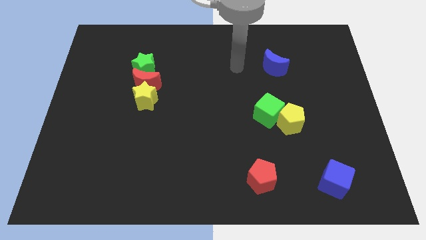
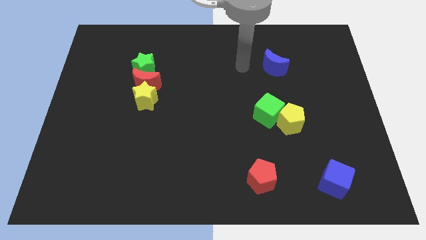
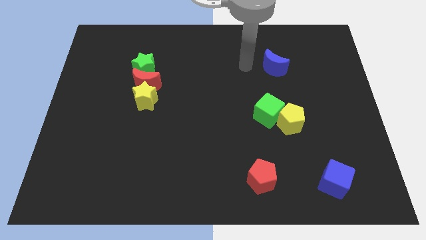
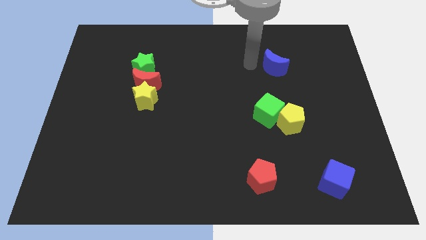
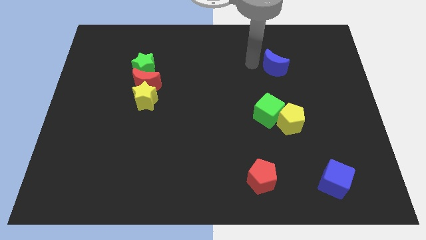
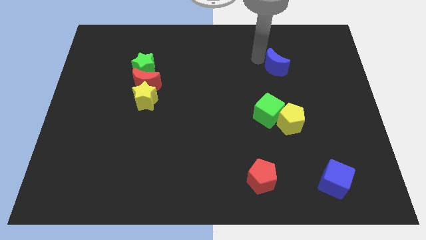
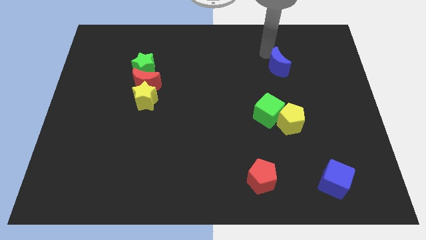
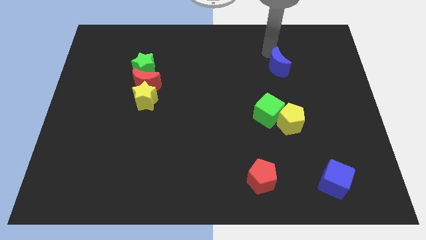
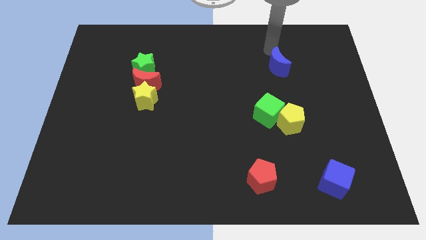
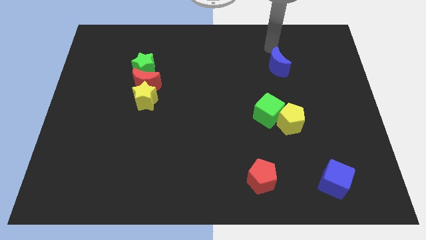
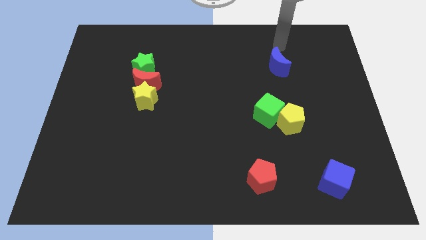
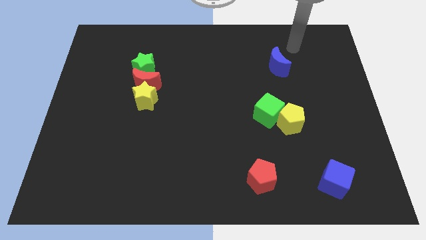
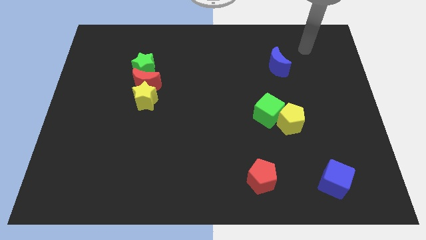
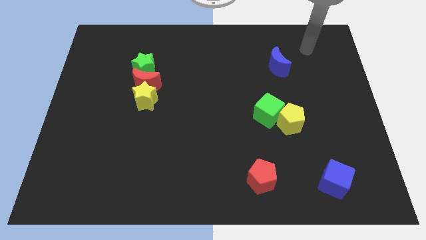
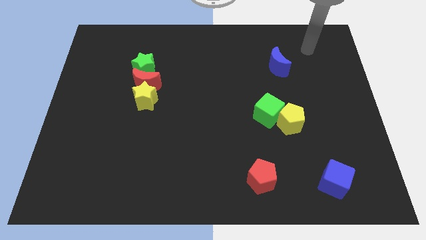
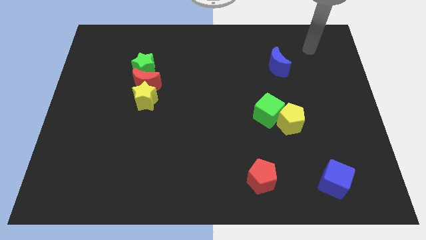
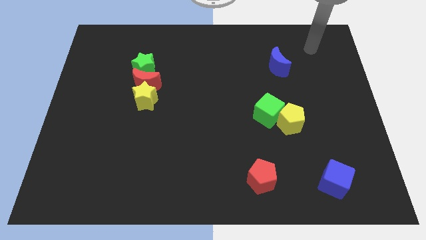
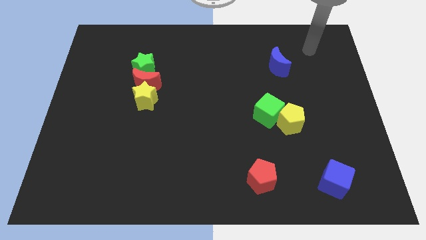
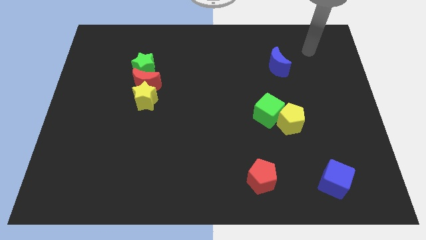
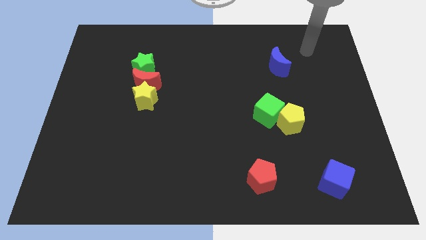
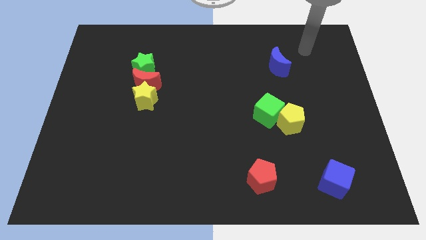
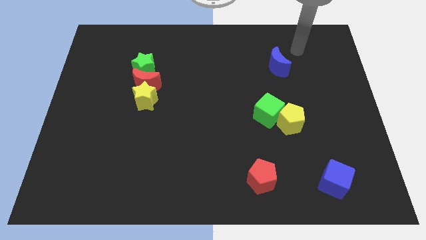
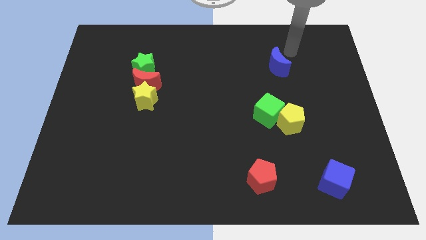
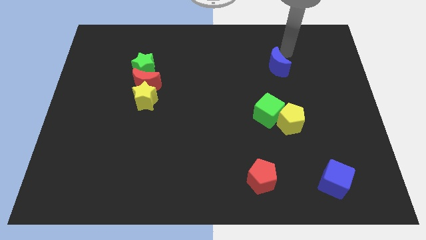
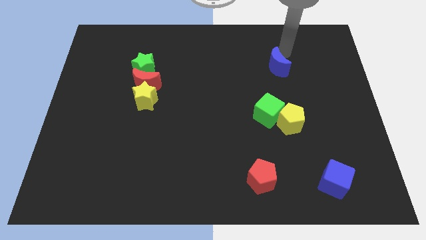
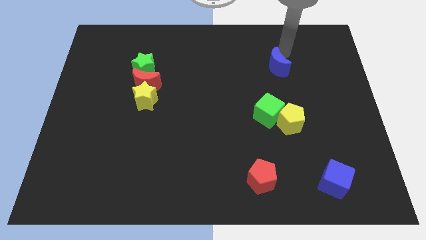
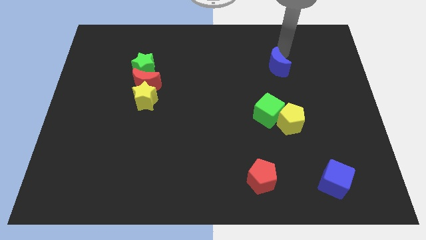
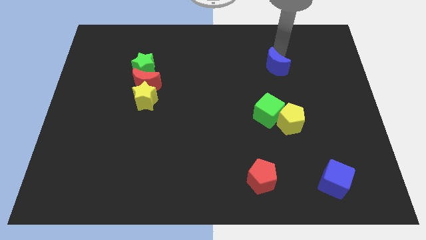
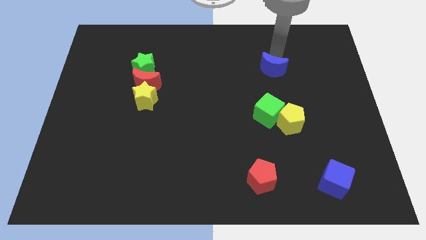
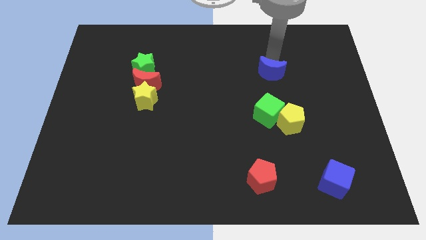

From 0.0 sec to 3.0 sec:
place arm above blue moon

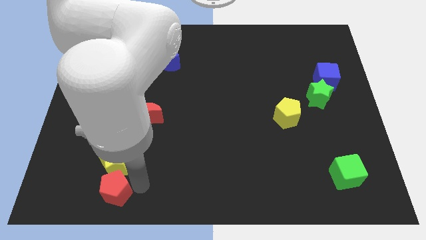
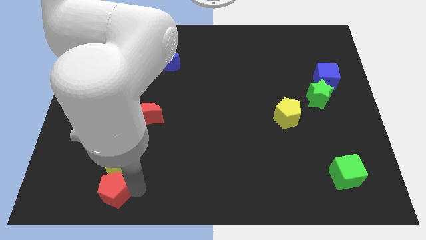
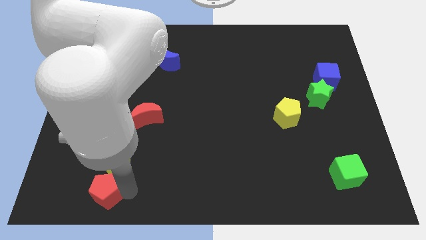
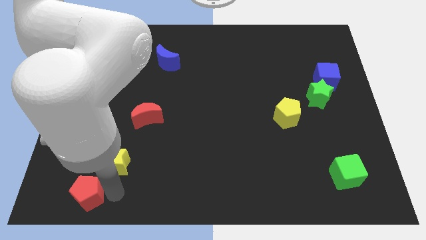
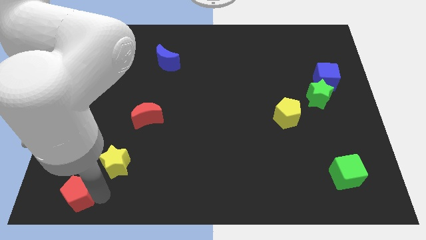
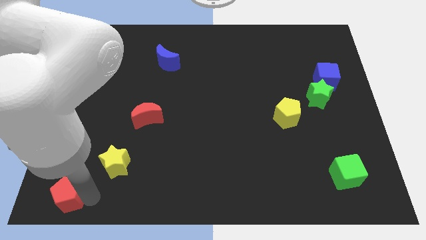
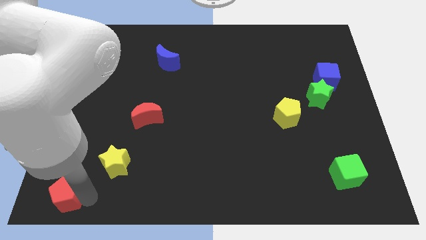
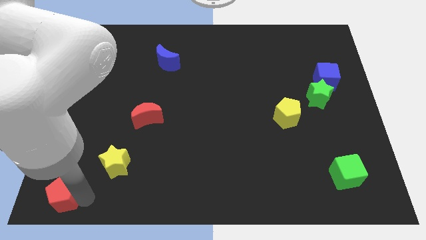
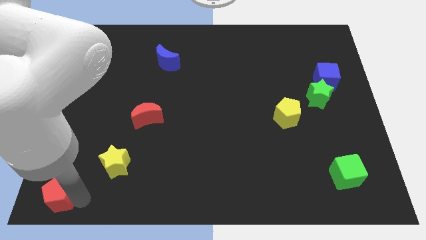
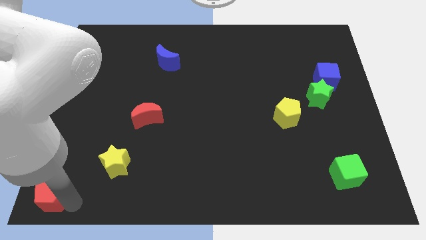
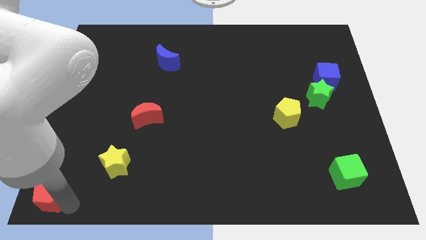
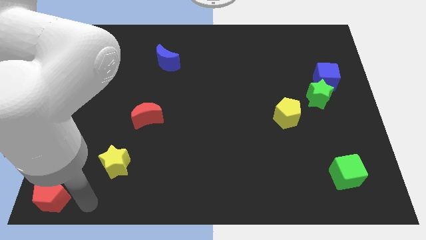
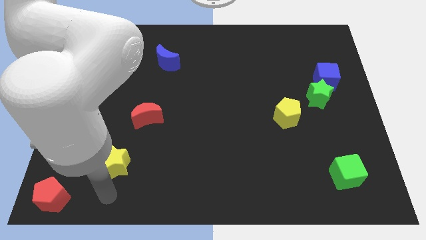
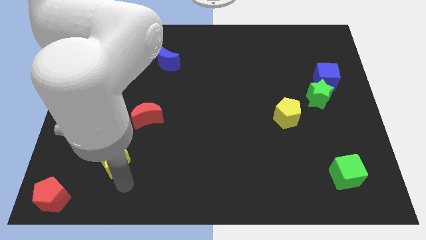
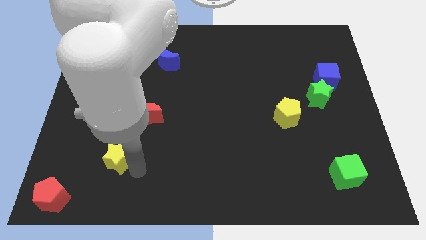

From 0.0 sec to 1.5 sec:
slightly move the red pentagon to bottom left

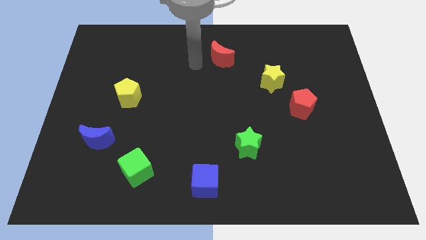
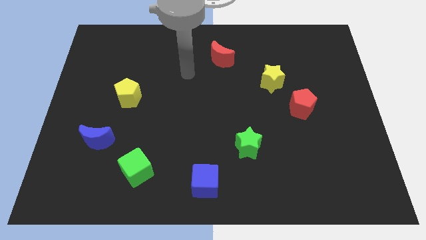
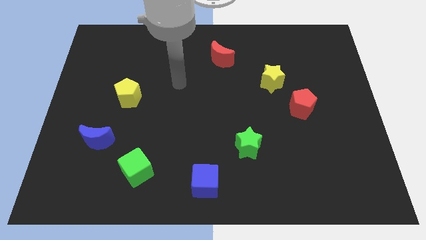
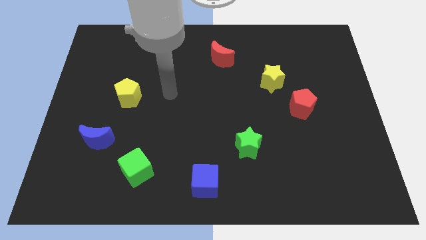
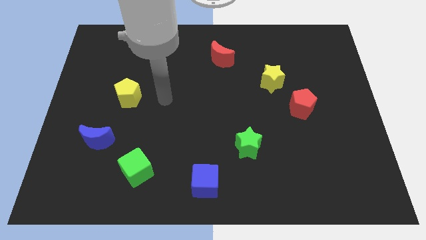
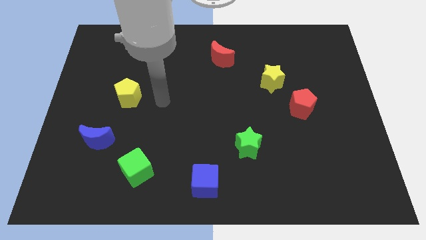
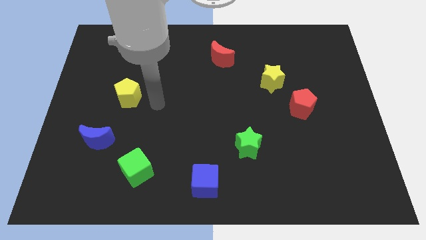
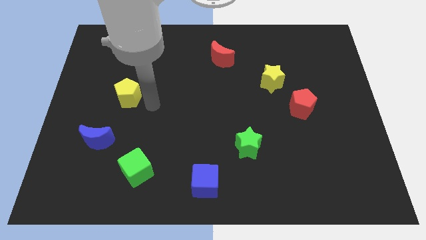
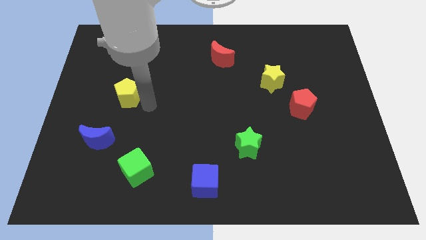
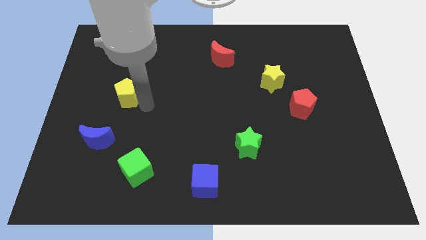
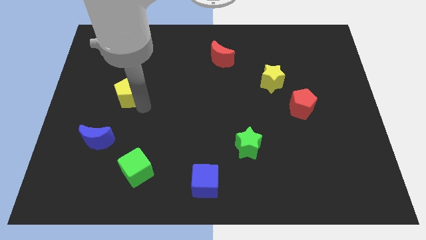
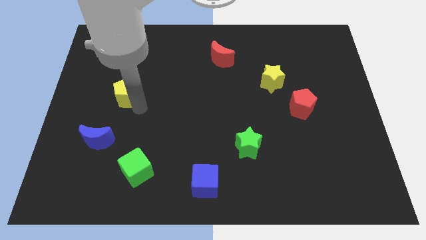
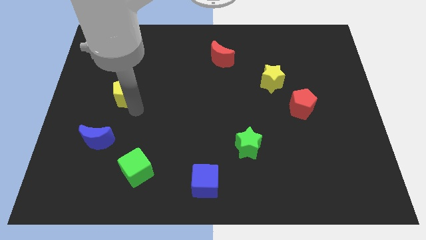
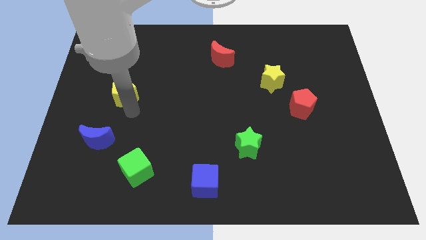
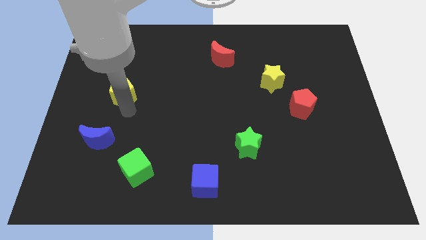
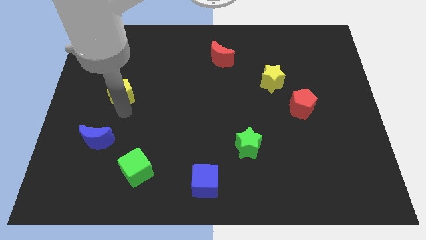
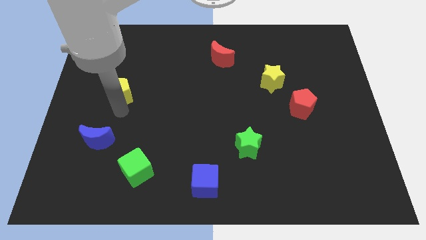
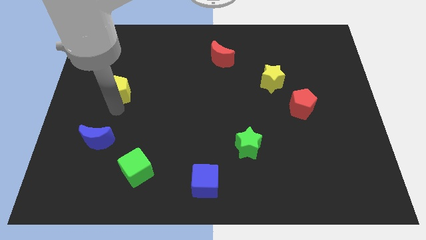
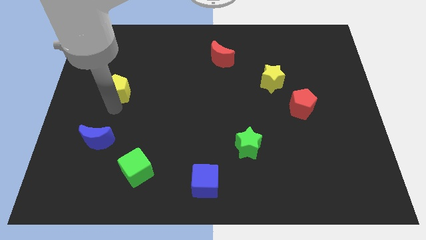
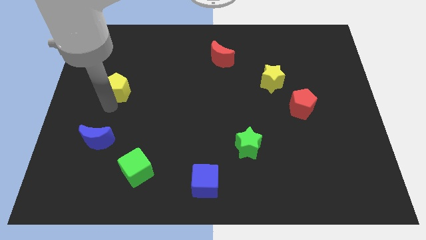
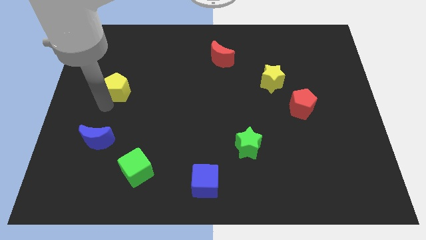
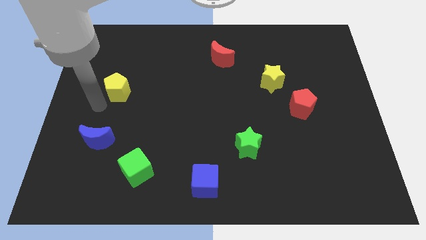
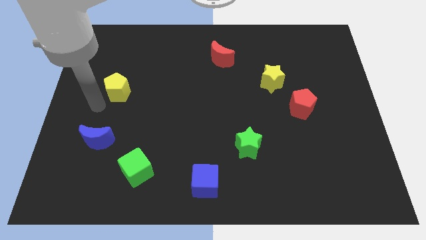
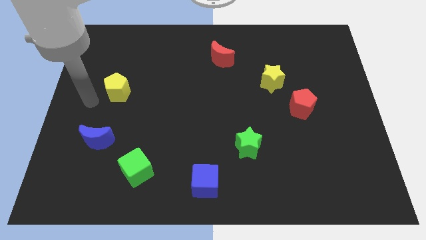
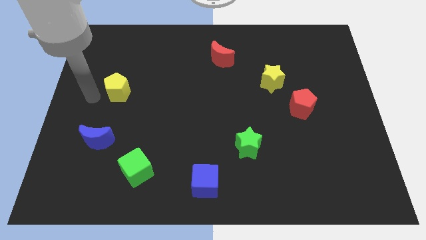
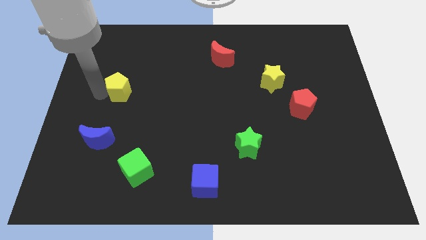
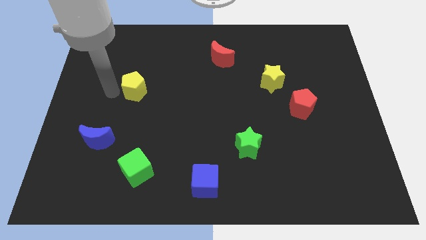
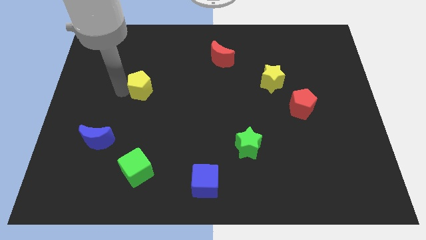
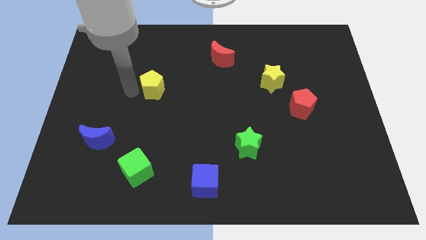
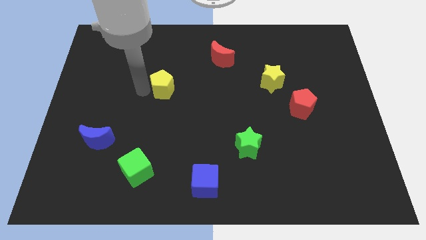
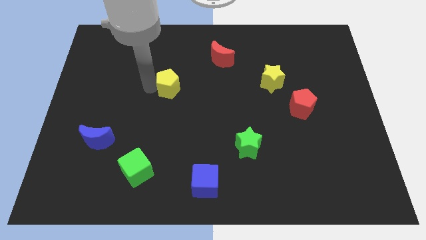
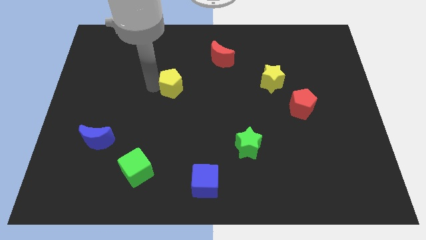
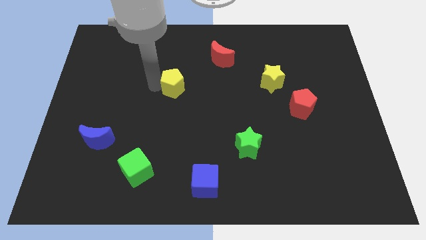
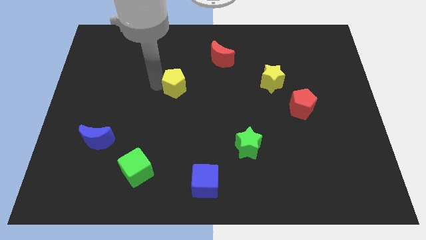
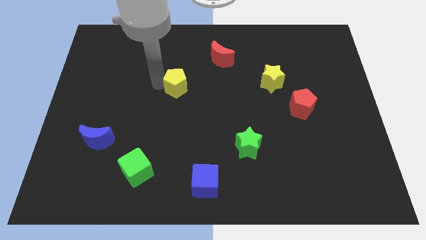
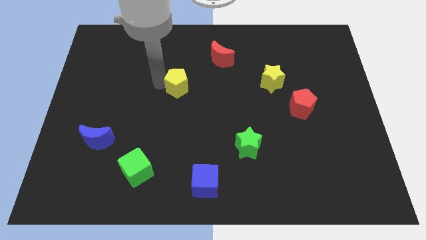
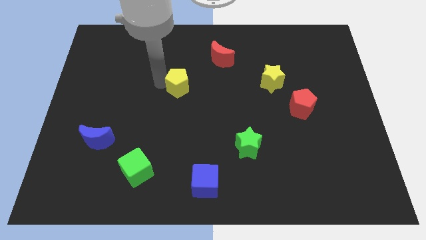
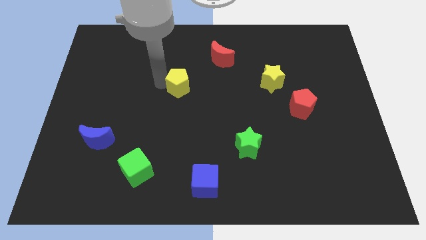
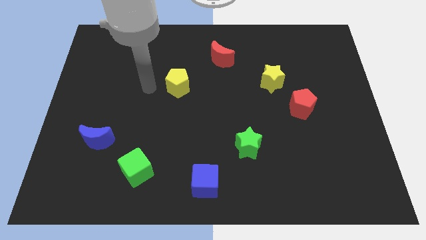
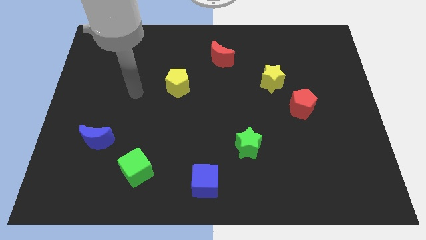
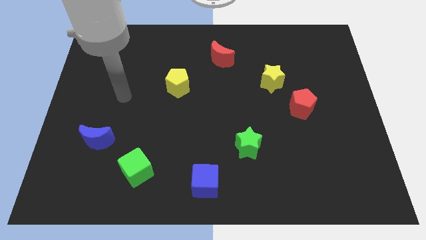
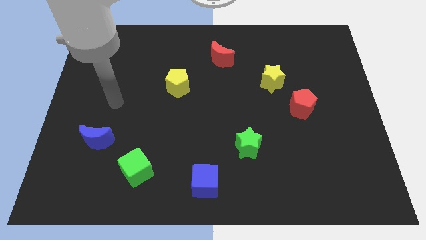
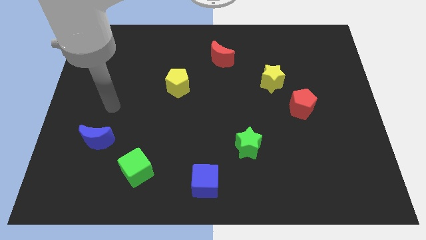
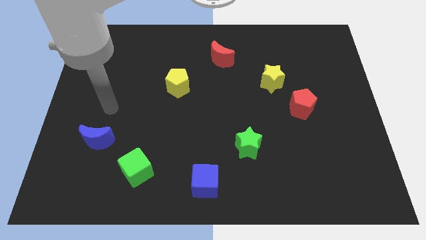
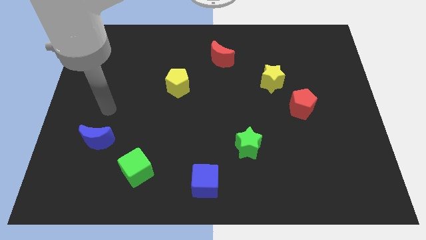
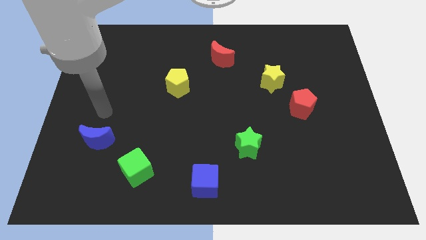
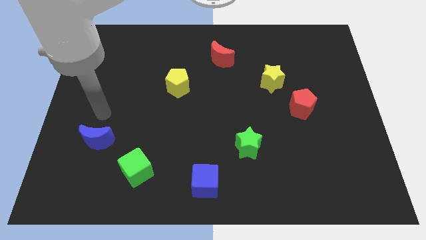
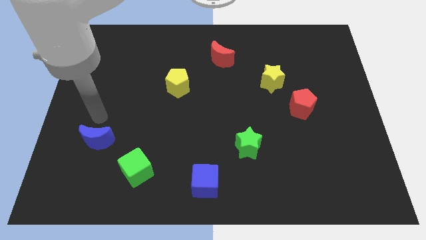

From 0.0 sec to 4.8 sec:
move the yellow pentagon to the center of the board

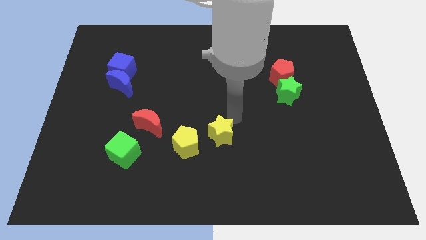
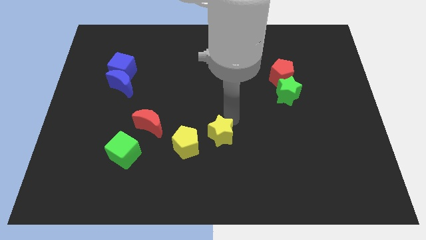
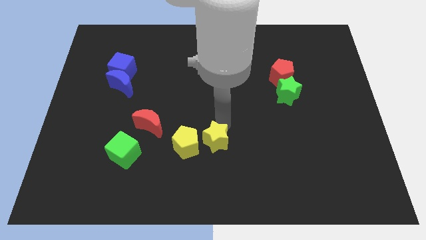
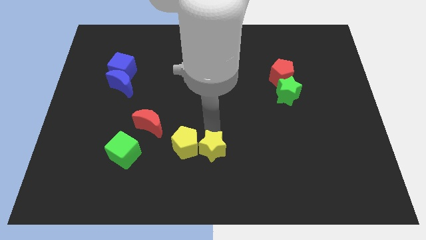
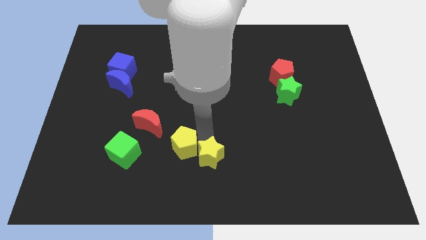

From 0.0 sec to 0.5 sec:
push the yellow star right to the yellow pentagon
